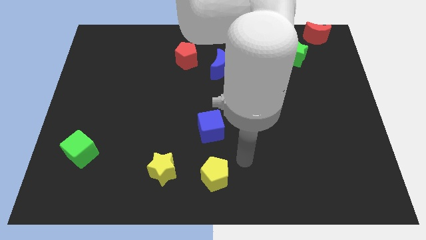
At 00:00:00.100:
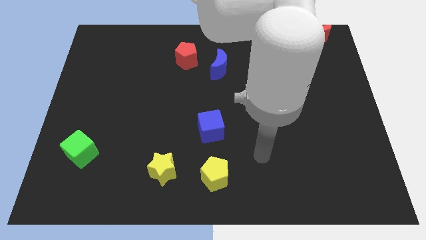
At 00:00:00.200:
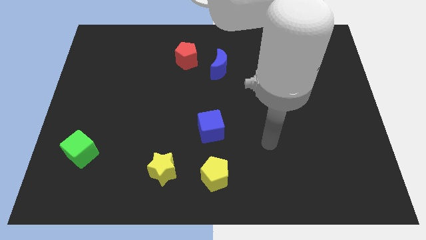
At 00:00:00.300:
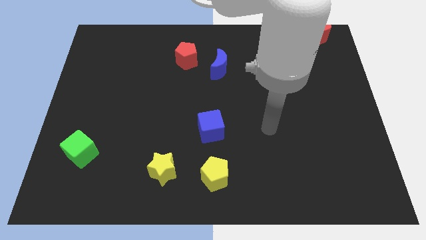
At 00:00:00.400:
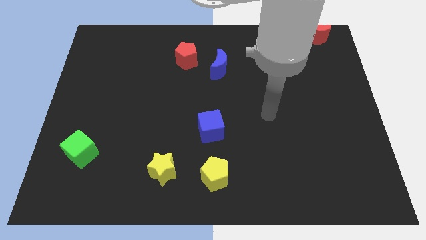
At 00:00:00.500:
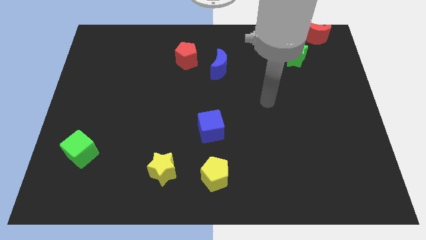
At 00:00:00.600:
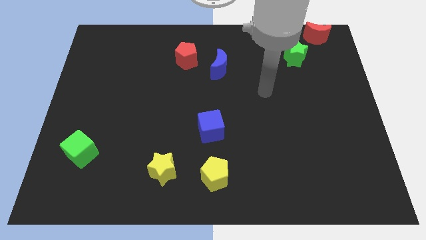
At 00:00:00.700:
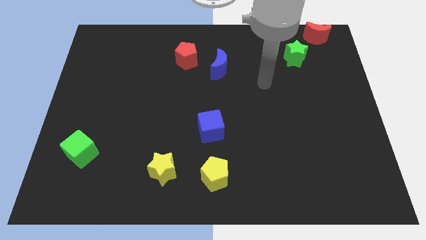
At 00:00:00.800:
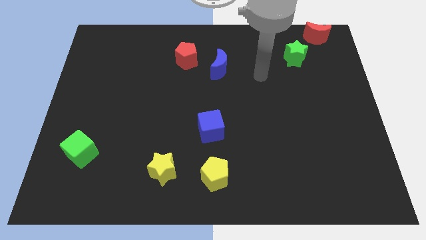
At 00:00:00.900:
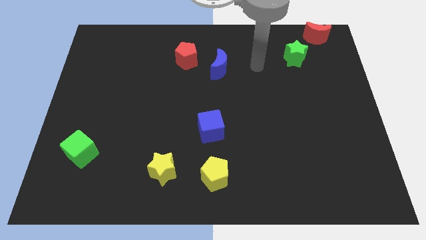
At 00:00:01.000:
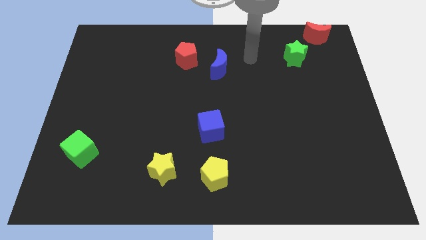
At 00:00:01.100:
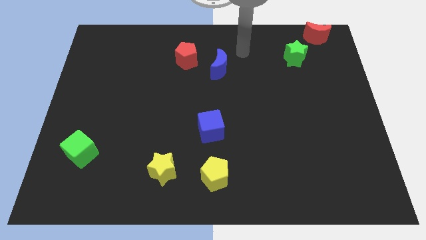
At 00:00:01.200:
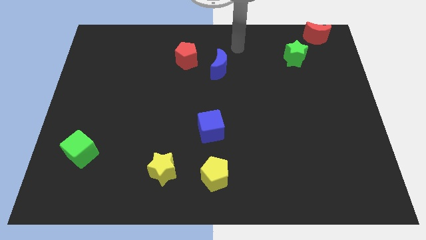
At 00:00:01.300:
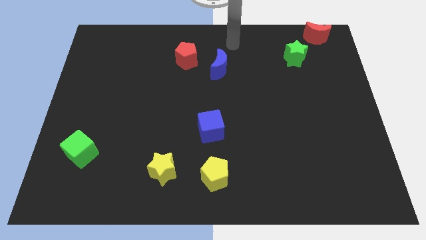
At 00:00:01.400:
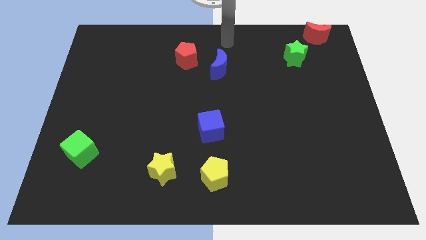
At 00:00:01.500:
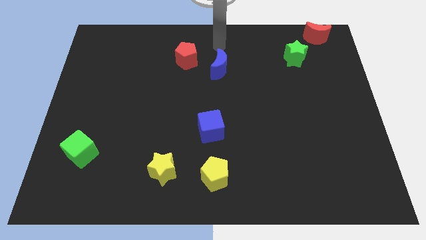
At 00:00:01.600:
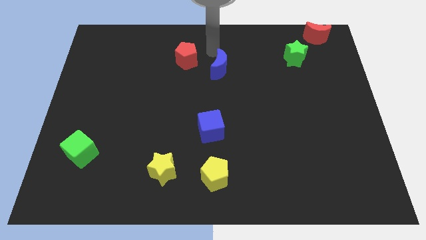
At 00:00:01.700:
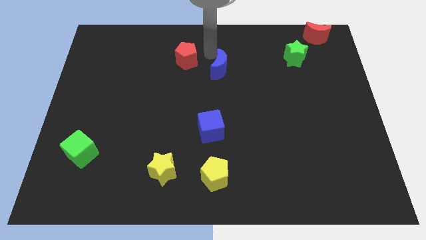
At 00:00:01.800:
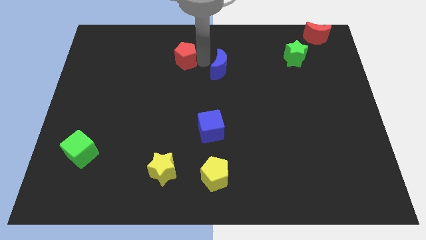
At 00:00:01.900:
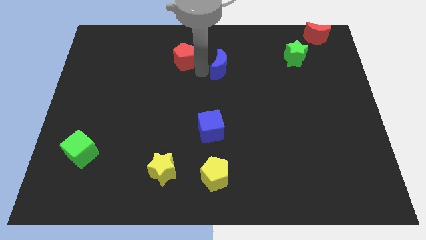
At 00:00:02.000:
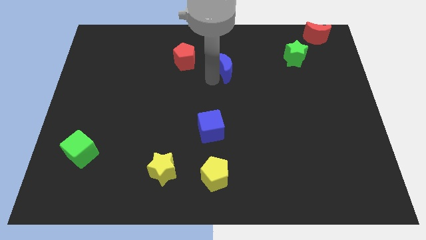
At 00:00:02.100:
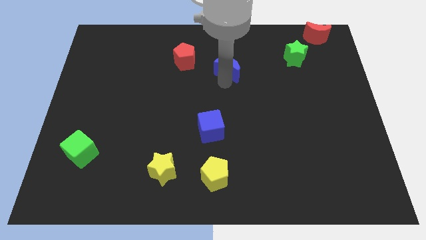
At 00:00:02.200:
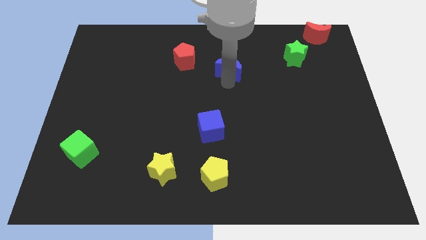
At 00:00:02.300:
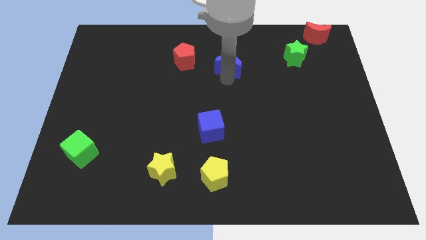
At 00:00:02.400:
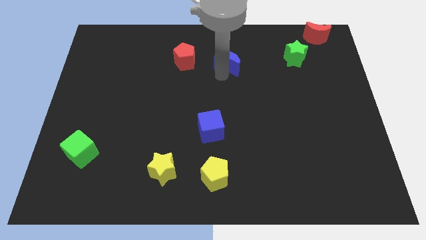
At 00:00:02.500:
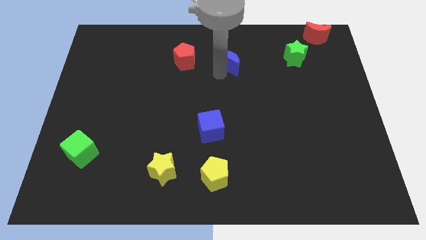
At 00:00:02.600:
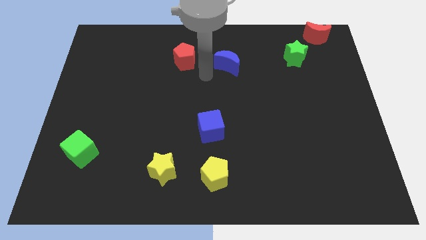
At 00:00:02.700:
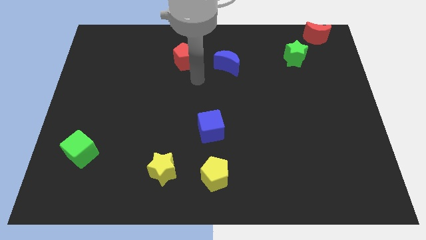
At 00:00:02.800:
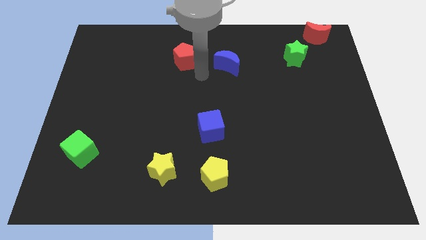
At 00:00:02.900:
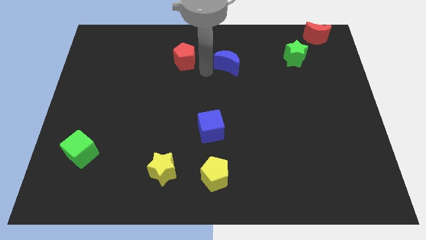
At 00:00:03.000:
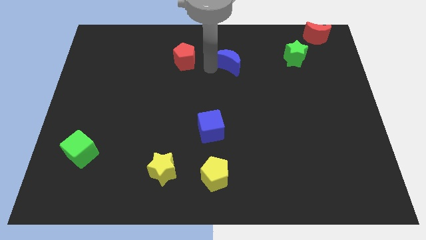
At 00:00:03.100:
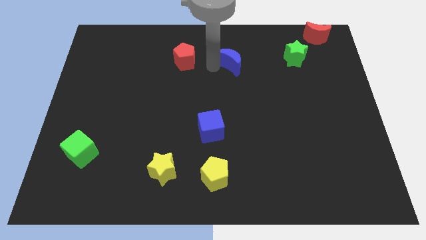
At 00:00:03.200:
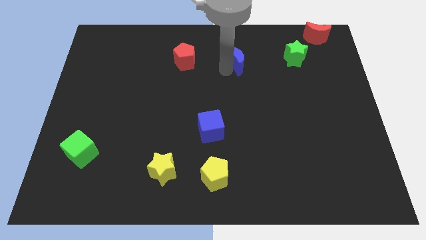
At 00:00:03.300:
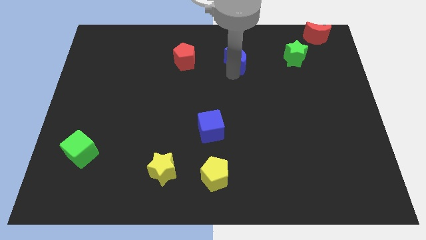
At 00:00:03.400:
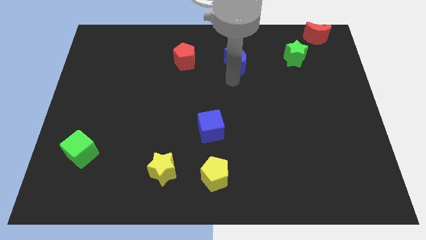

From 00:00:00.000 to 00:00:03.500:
place the blue moon to the right side of the red pentagon

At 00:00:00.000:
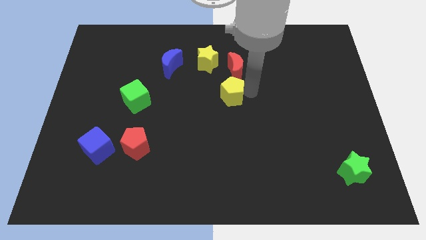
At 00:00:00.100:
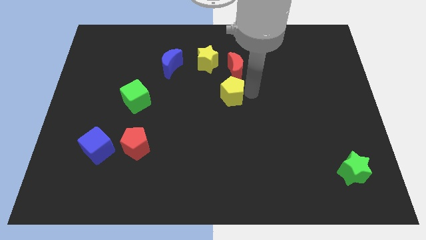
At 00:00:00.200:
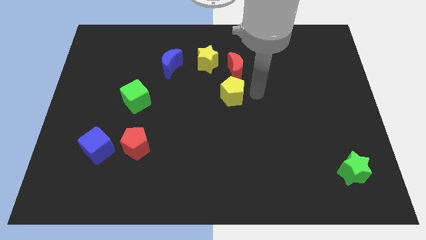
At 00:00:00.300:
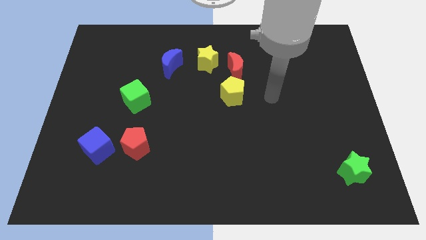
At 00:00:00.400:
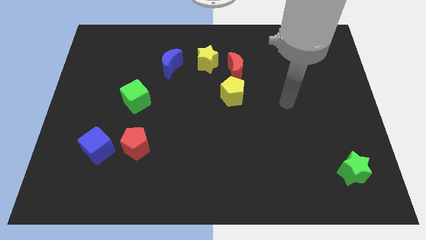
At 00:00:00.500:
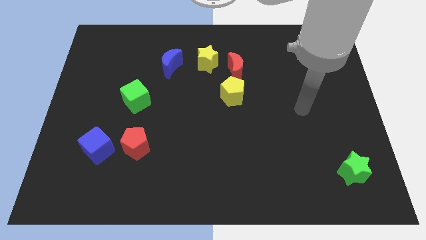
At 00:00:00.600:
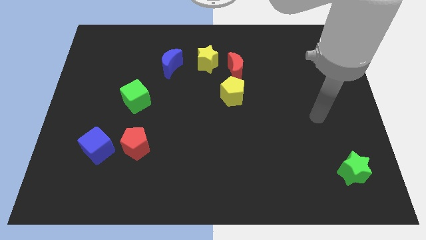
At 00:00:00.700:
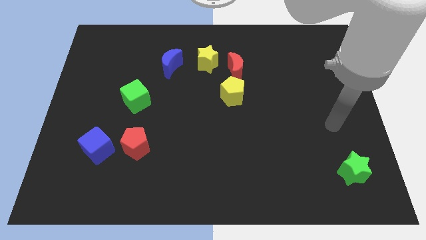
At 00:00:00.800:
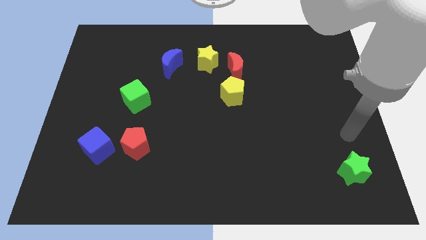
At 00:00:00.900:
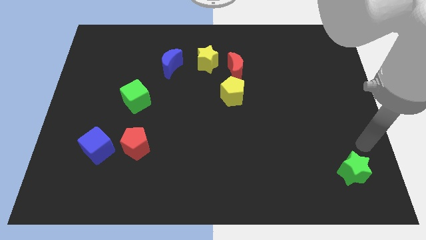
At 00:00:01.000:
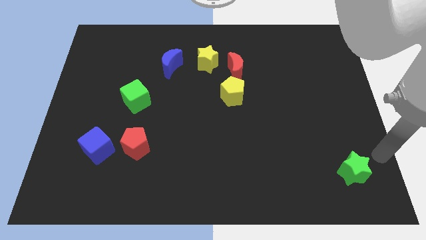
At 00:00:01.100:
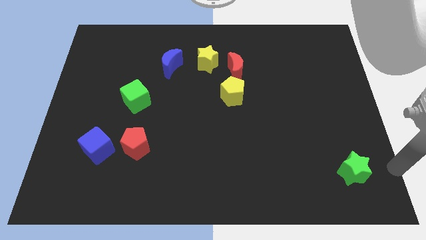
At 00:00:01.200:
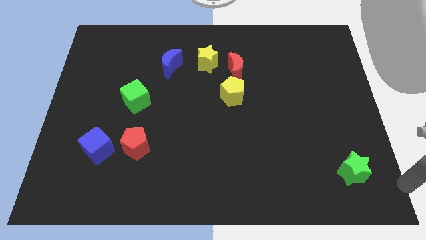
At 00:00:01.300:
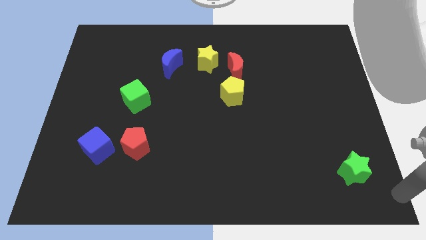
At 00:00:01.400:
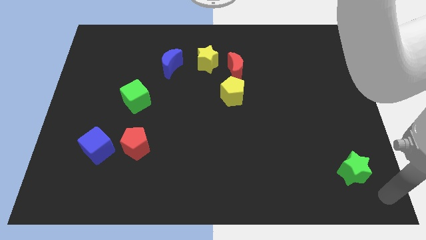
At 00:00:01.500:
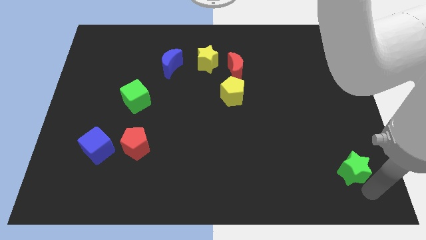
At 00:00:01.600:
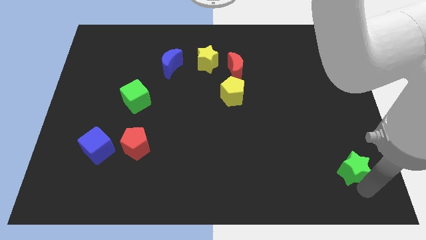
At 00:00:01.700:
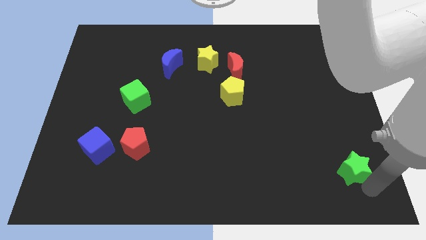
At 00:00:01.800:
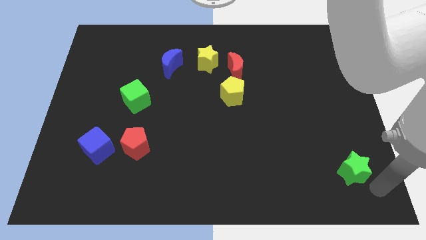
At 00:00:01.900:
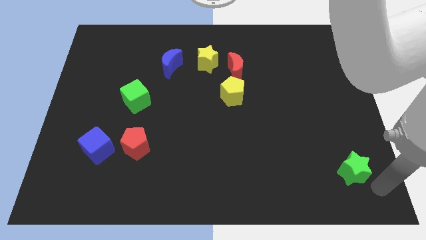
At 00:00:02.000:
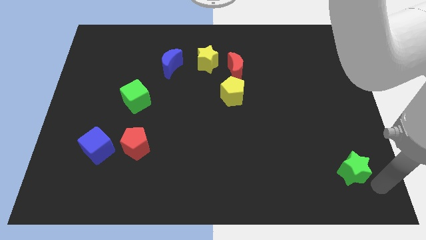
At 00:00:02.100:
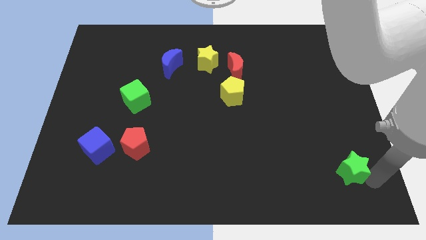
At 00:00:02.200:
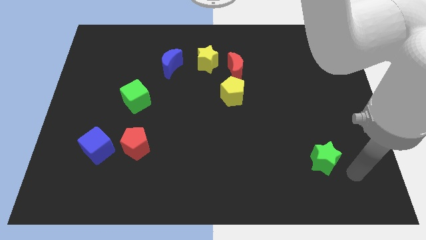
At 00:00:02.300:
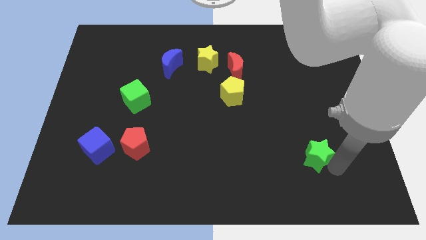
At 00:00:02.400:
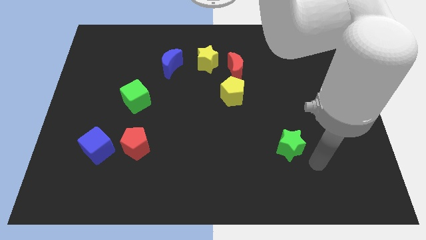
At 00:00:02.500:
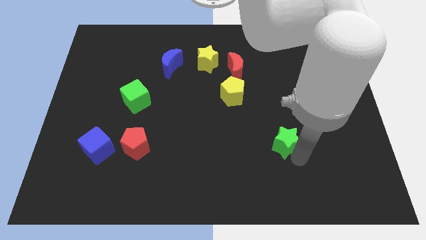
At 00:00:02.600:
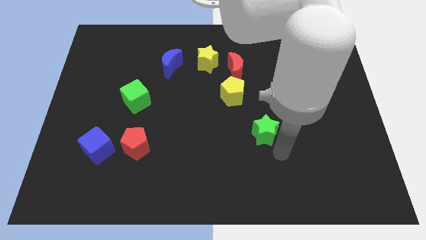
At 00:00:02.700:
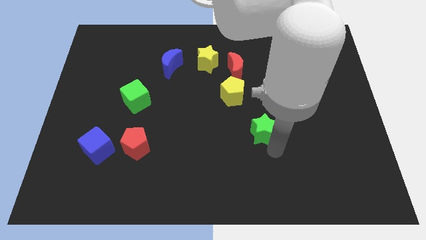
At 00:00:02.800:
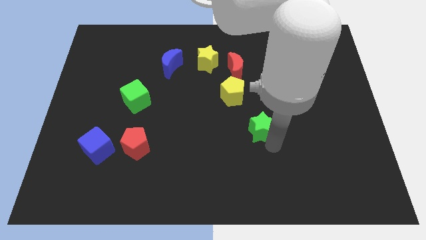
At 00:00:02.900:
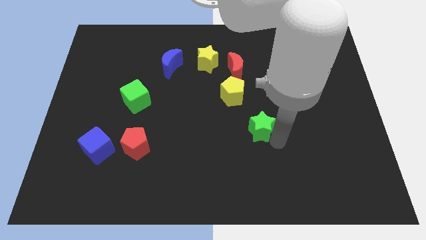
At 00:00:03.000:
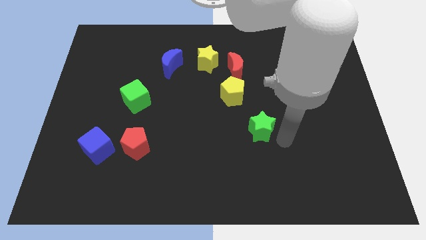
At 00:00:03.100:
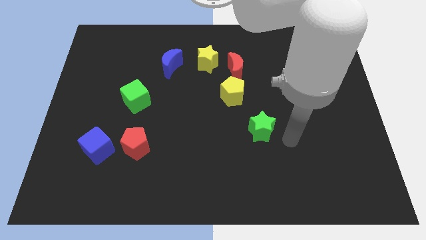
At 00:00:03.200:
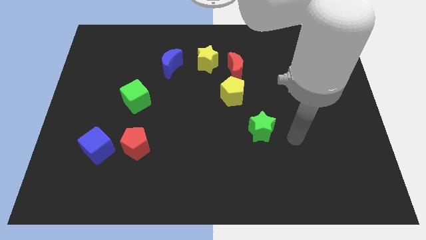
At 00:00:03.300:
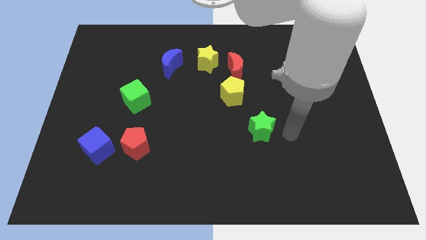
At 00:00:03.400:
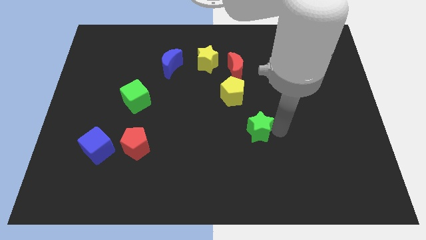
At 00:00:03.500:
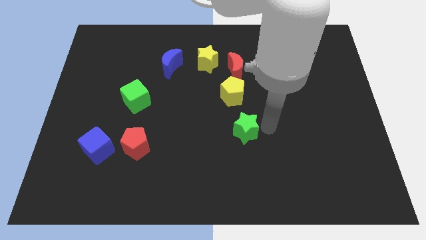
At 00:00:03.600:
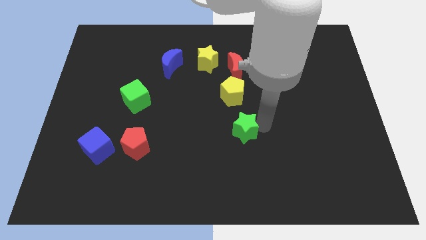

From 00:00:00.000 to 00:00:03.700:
move the green star diagonally below the yellow pentagon

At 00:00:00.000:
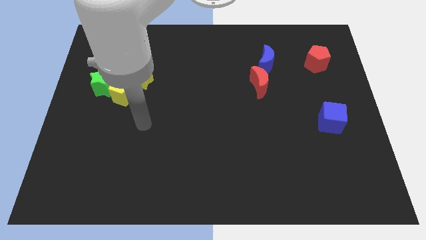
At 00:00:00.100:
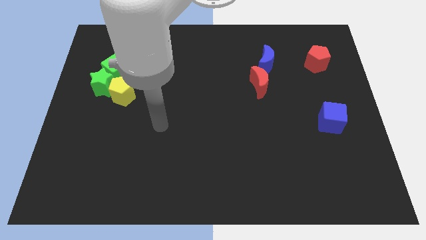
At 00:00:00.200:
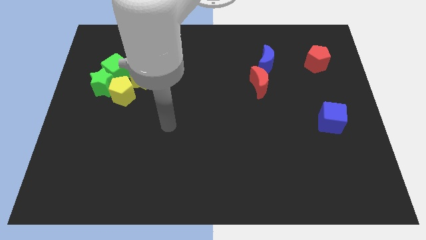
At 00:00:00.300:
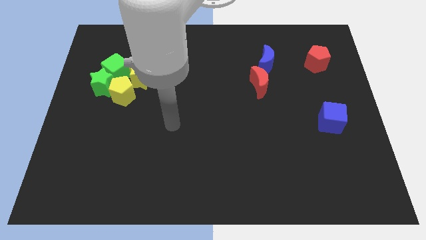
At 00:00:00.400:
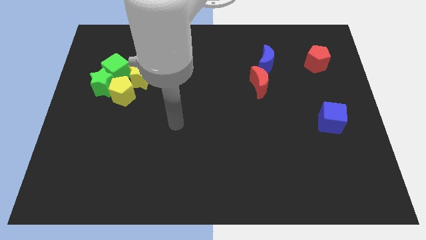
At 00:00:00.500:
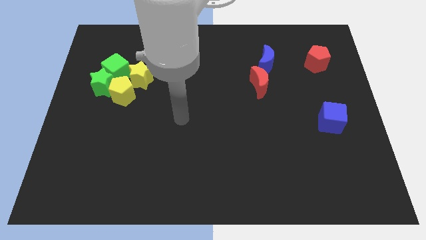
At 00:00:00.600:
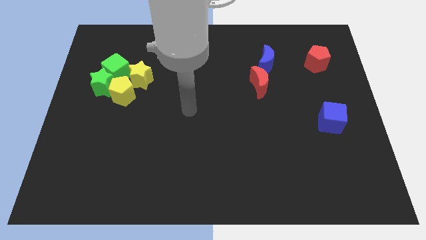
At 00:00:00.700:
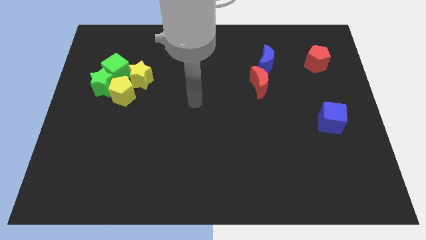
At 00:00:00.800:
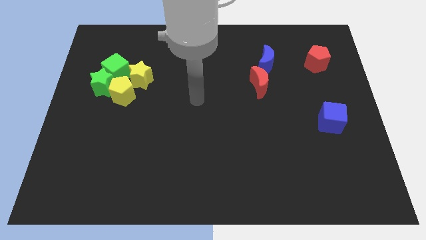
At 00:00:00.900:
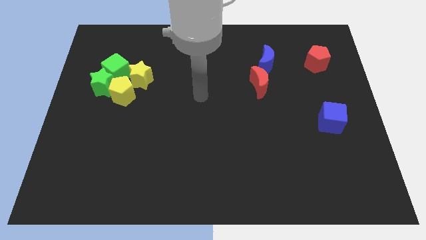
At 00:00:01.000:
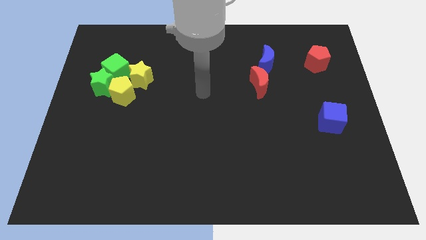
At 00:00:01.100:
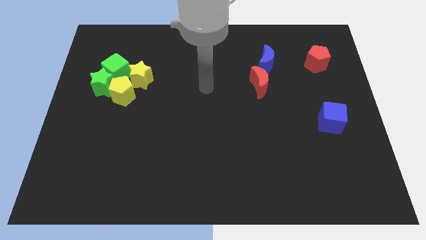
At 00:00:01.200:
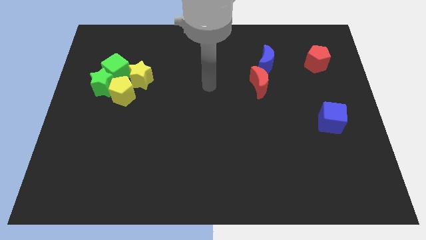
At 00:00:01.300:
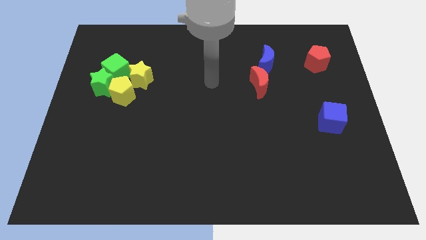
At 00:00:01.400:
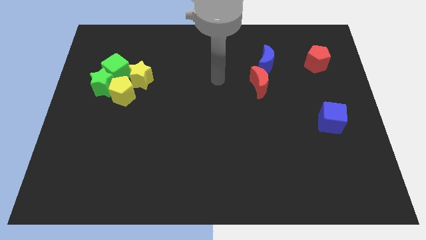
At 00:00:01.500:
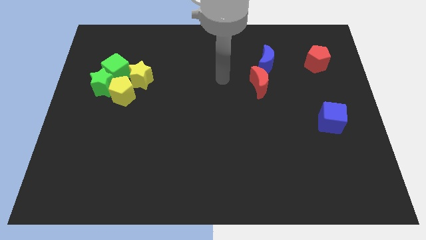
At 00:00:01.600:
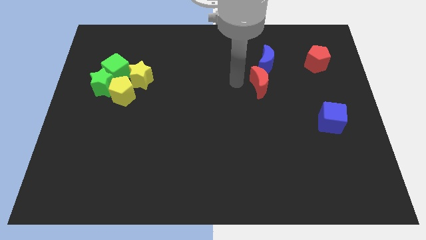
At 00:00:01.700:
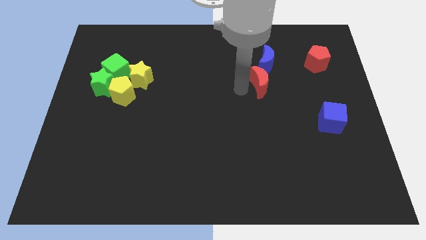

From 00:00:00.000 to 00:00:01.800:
move your arm to the left of the red crescent
